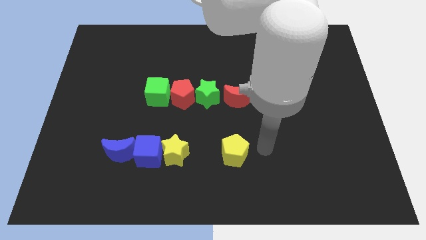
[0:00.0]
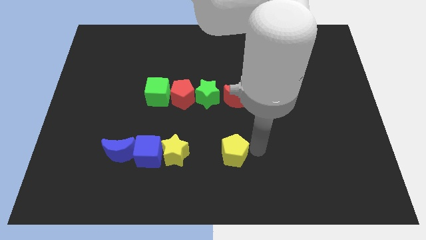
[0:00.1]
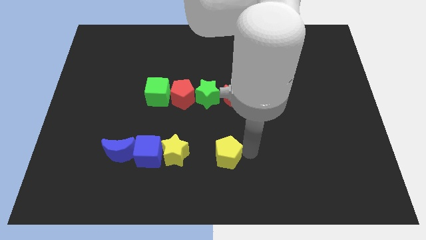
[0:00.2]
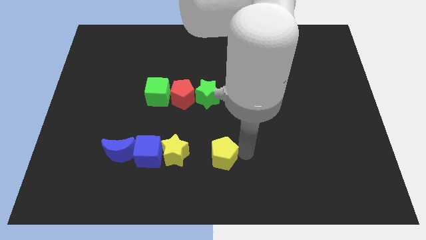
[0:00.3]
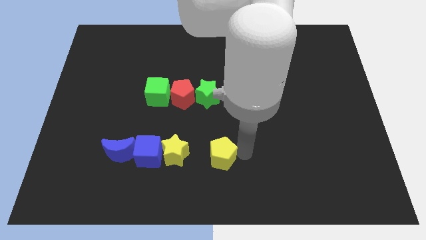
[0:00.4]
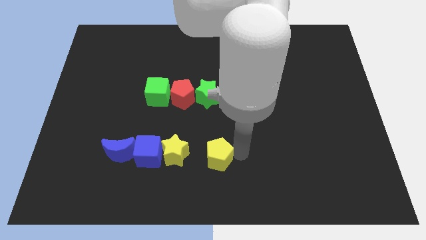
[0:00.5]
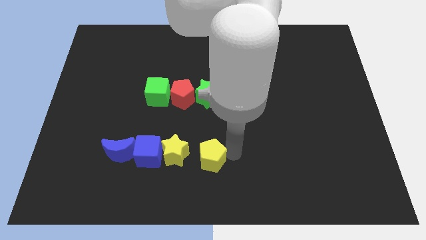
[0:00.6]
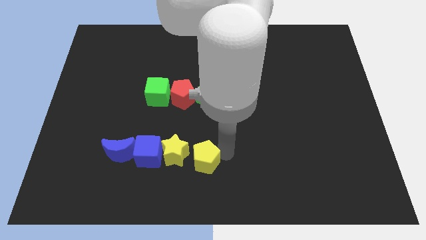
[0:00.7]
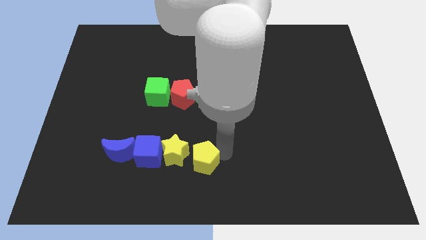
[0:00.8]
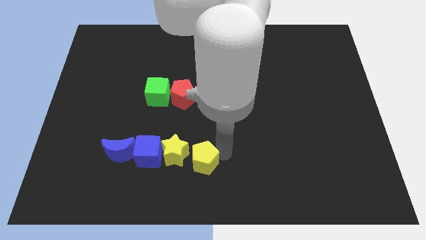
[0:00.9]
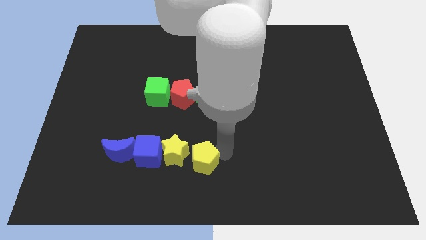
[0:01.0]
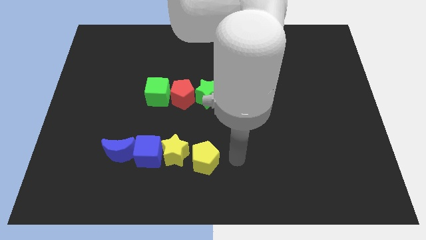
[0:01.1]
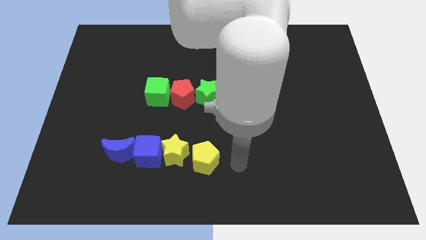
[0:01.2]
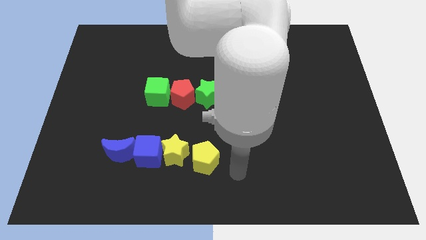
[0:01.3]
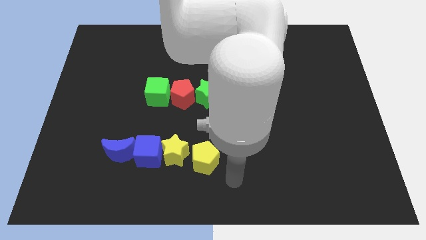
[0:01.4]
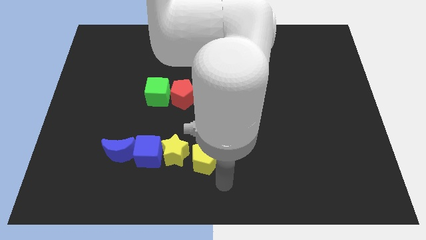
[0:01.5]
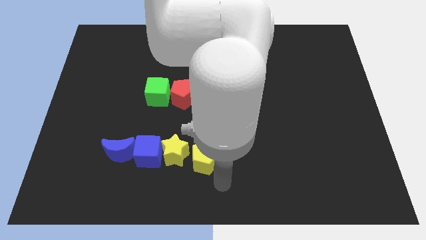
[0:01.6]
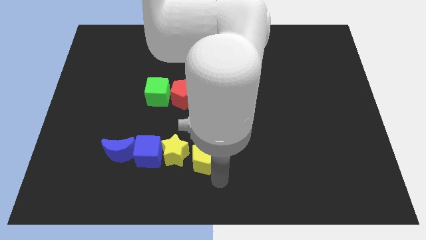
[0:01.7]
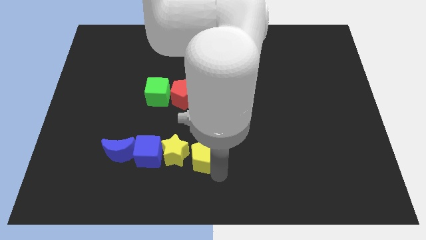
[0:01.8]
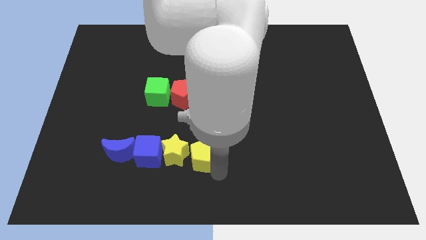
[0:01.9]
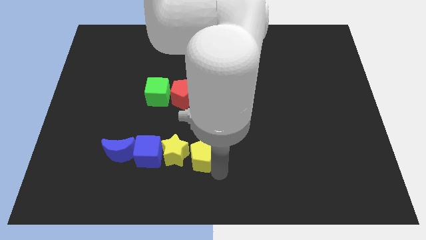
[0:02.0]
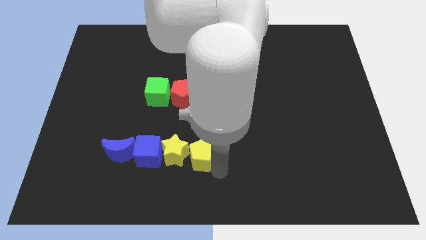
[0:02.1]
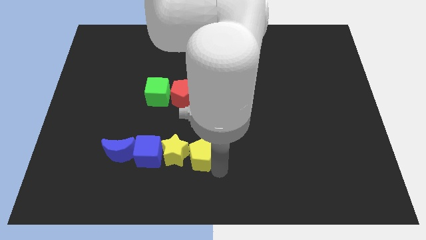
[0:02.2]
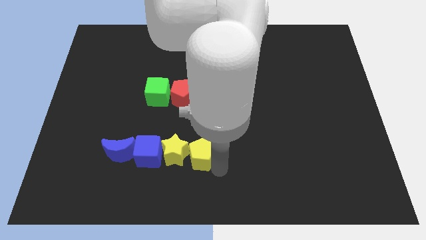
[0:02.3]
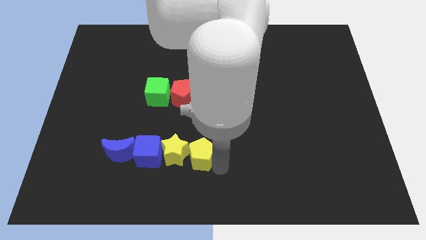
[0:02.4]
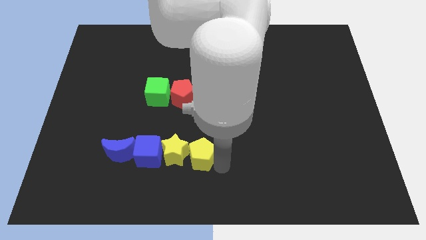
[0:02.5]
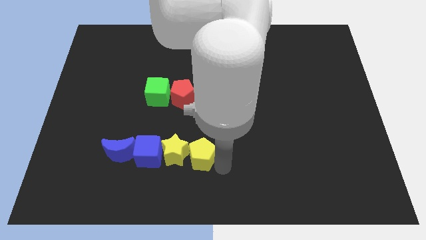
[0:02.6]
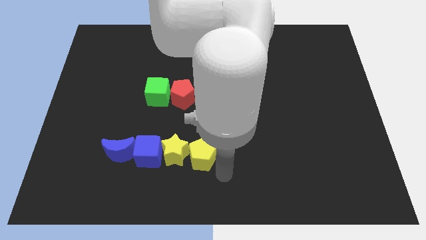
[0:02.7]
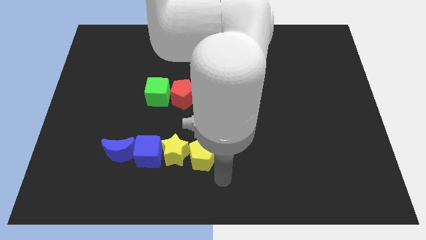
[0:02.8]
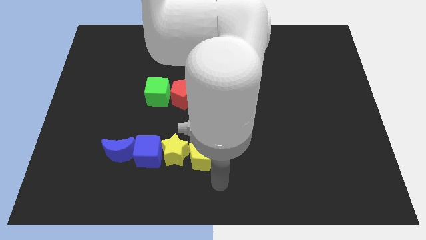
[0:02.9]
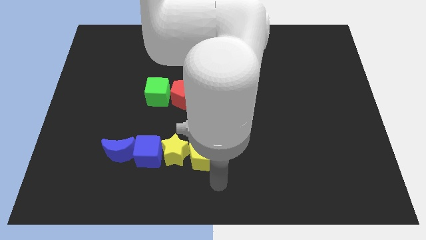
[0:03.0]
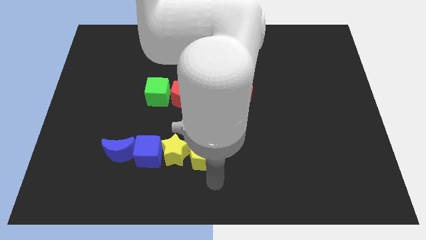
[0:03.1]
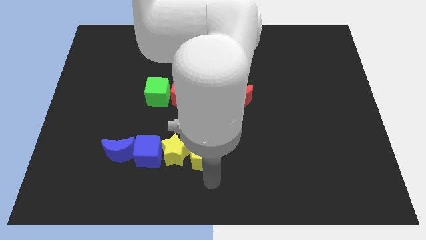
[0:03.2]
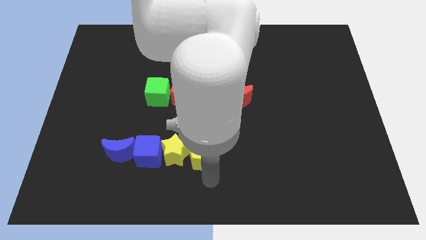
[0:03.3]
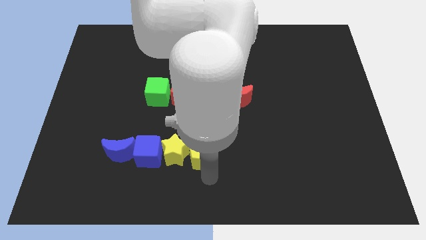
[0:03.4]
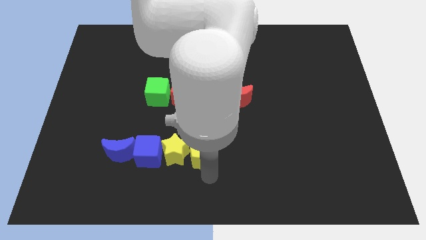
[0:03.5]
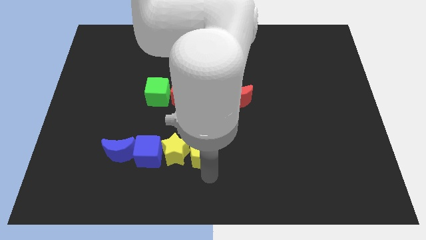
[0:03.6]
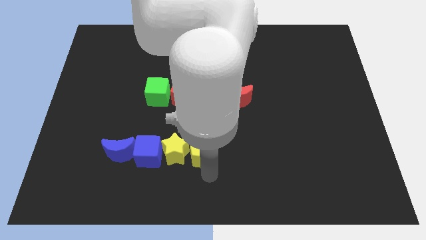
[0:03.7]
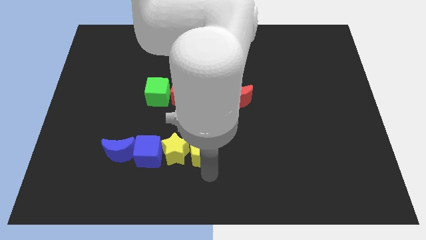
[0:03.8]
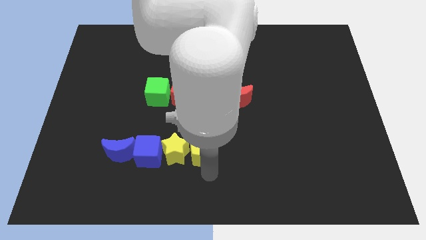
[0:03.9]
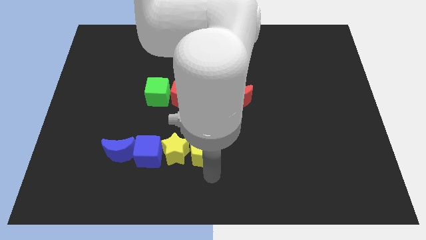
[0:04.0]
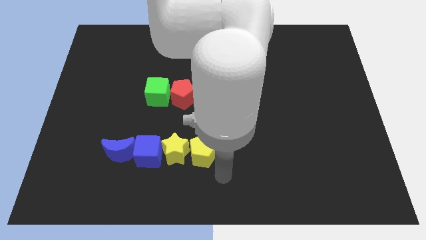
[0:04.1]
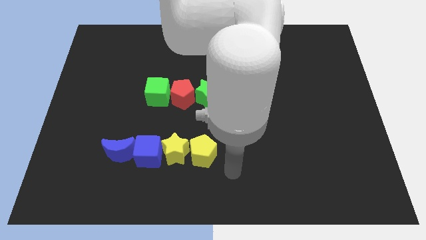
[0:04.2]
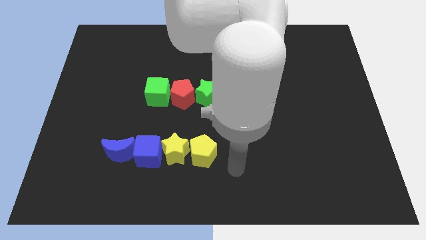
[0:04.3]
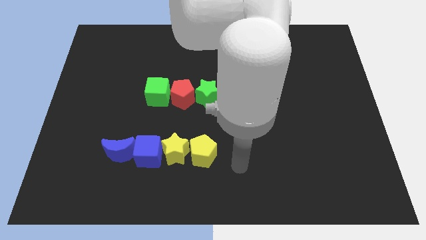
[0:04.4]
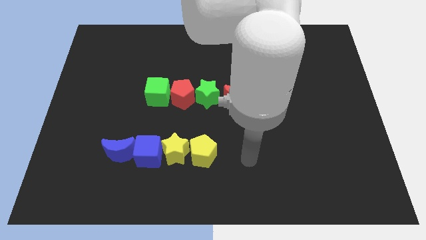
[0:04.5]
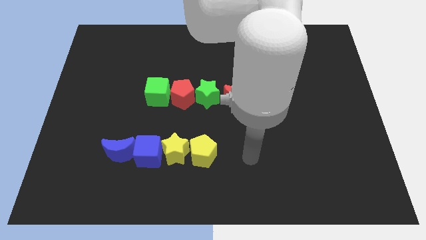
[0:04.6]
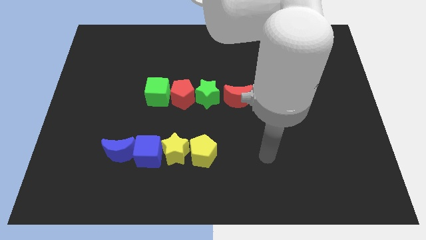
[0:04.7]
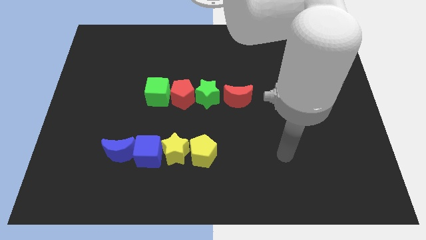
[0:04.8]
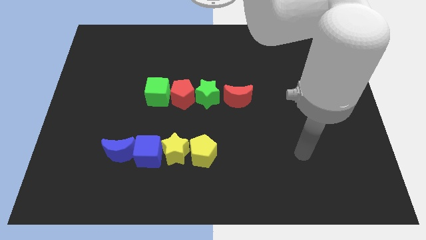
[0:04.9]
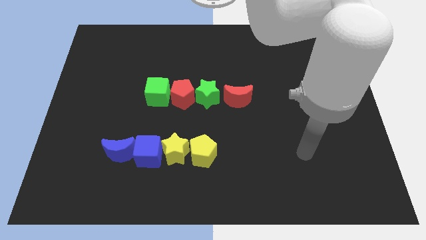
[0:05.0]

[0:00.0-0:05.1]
push the yellow pentagon right to the yellow star

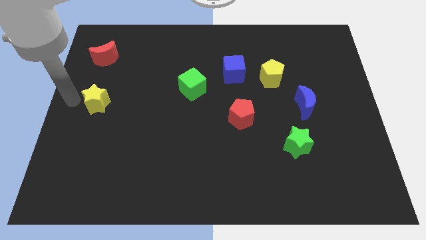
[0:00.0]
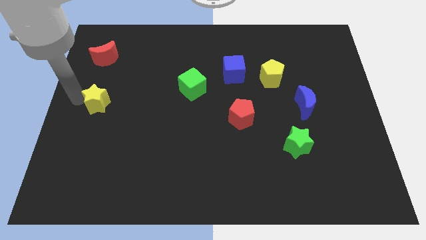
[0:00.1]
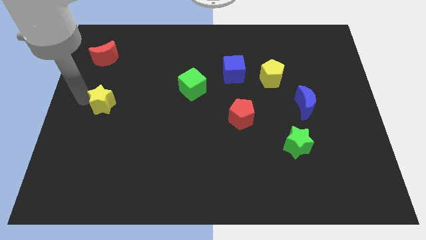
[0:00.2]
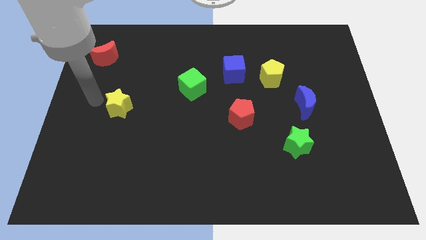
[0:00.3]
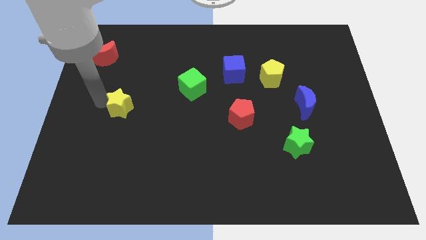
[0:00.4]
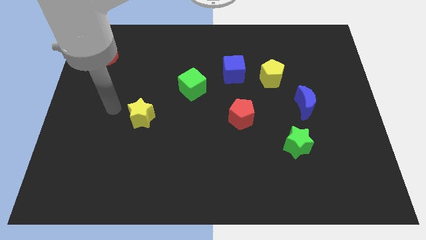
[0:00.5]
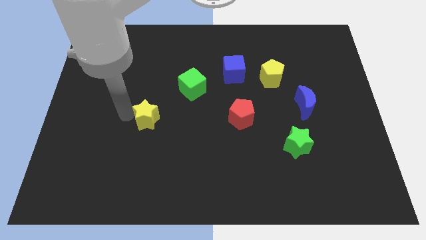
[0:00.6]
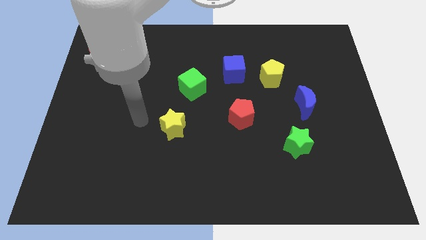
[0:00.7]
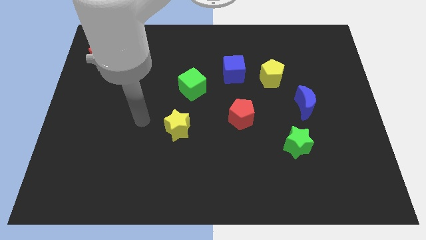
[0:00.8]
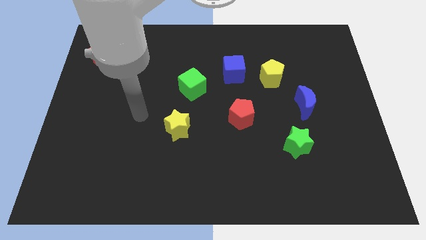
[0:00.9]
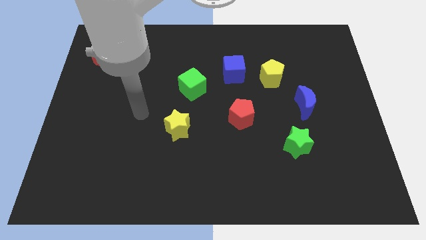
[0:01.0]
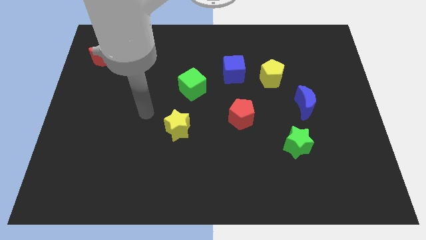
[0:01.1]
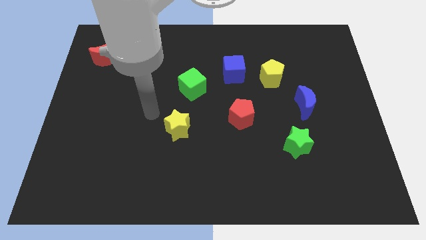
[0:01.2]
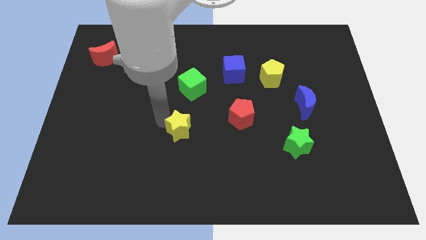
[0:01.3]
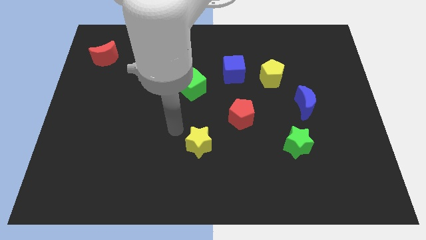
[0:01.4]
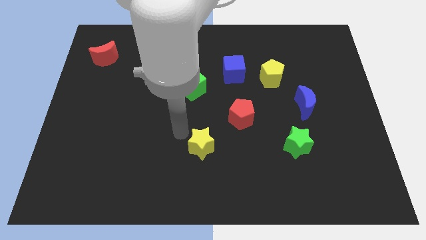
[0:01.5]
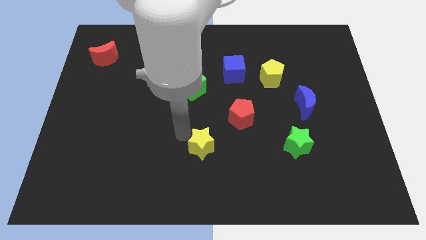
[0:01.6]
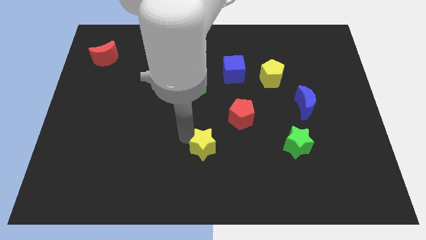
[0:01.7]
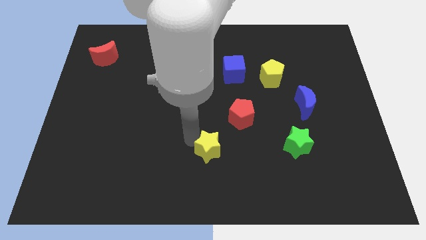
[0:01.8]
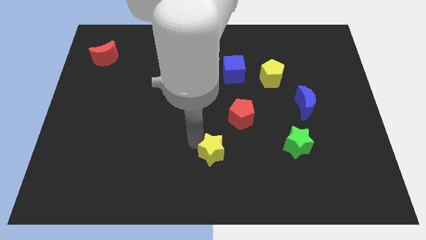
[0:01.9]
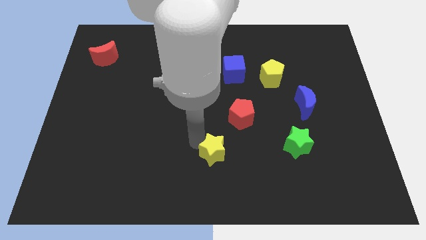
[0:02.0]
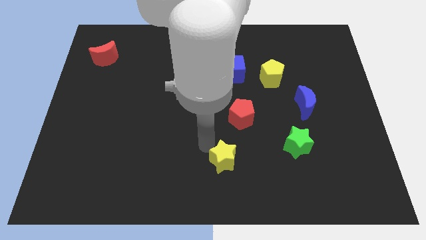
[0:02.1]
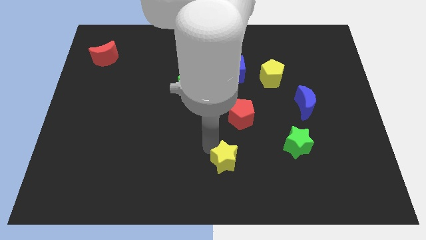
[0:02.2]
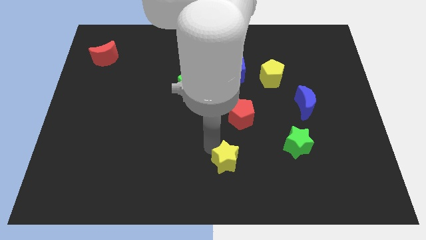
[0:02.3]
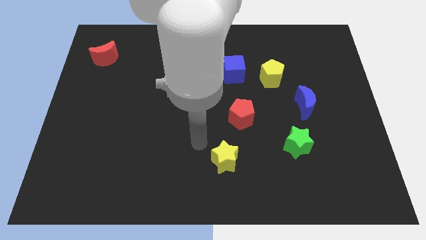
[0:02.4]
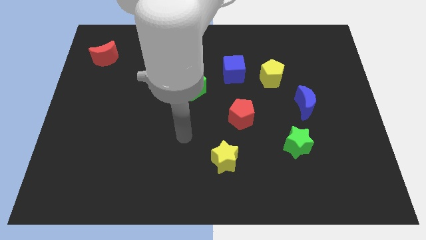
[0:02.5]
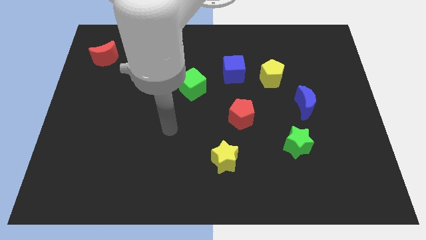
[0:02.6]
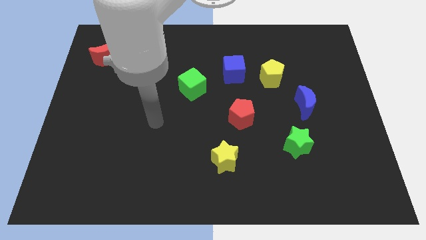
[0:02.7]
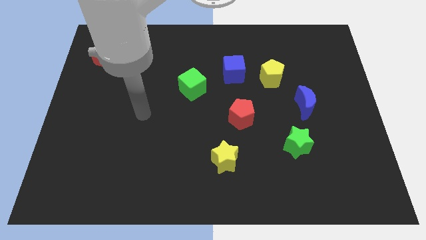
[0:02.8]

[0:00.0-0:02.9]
place the yellow star below the red pentagon

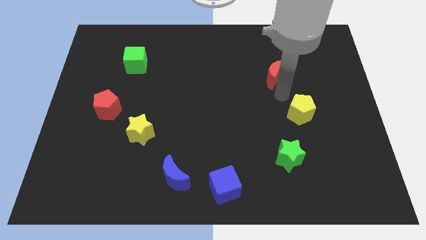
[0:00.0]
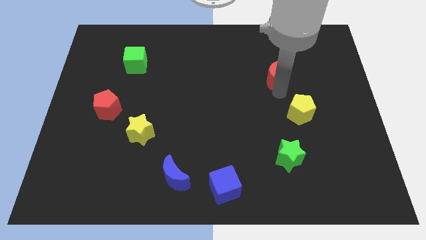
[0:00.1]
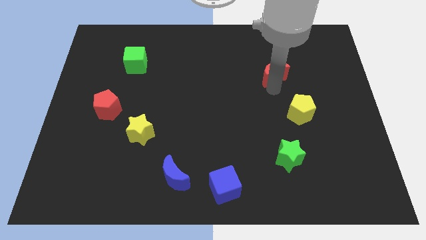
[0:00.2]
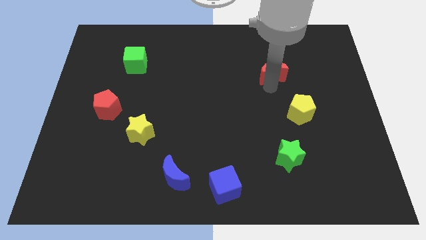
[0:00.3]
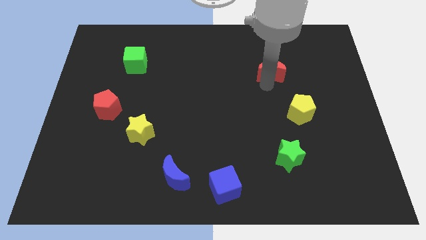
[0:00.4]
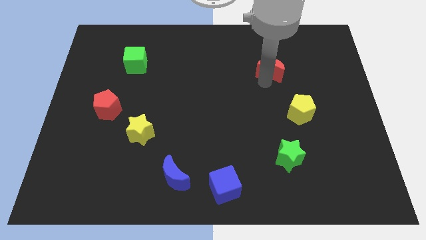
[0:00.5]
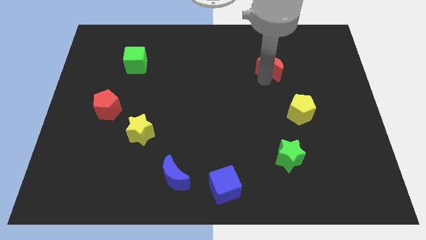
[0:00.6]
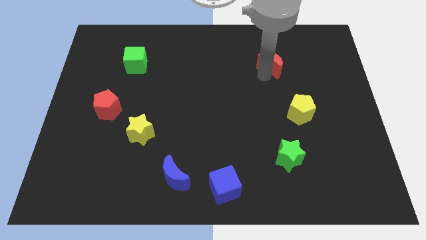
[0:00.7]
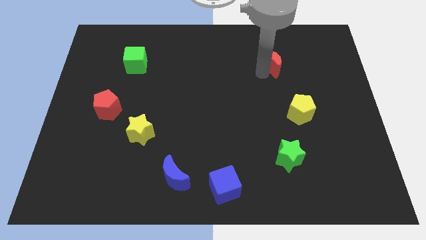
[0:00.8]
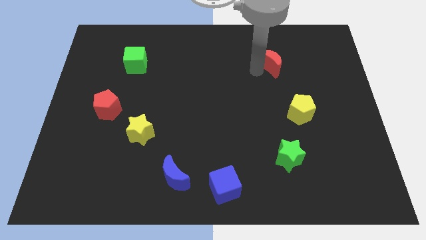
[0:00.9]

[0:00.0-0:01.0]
push the red crescent towards the top right side of the board

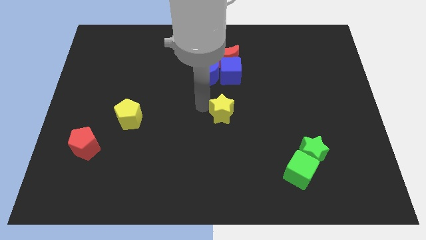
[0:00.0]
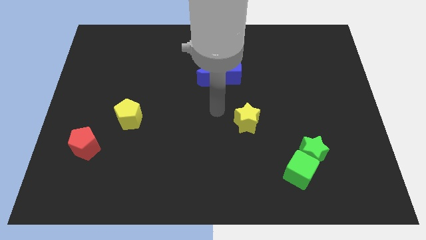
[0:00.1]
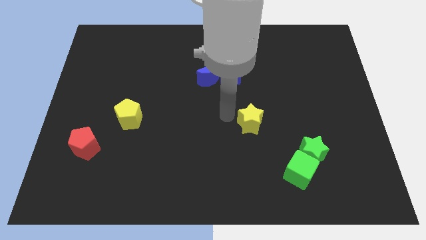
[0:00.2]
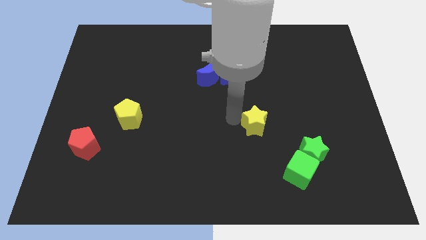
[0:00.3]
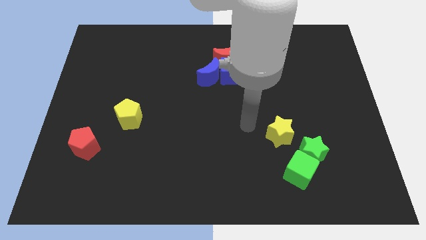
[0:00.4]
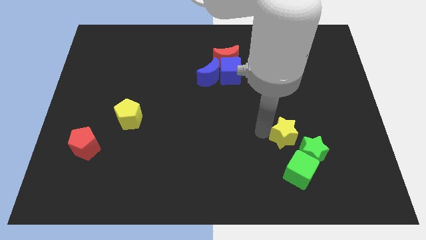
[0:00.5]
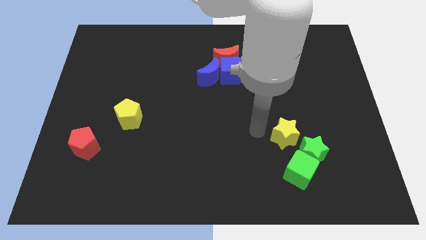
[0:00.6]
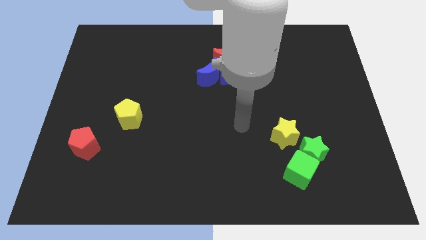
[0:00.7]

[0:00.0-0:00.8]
put the yellow star close to the green star
